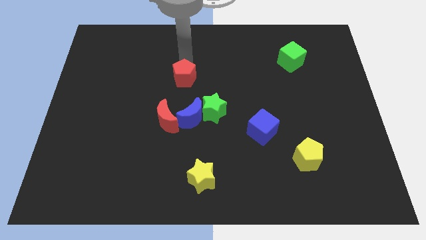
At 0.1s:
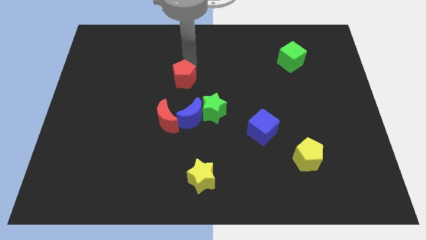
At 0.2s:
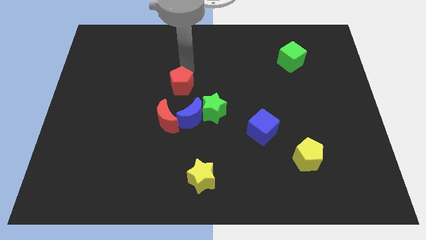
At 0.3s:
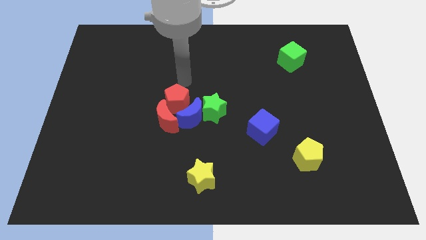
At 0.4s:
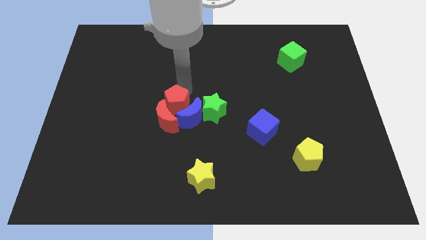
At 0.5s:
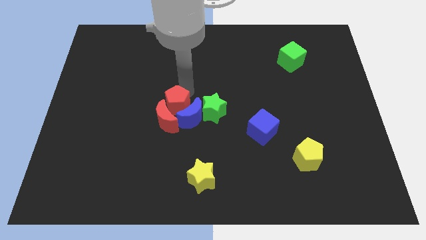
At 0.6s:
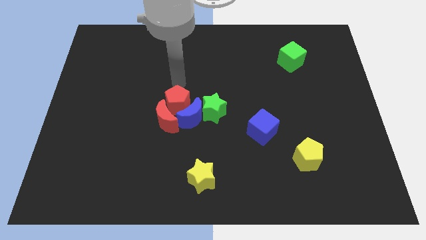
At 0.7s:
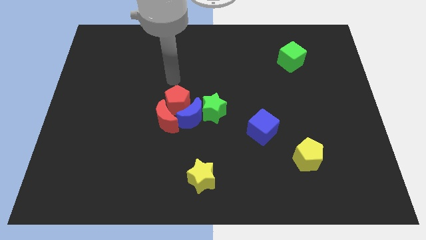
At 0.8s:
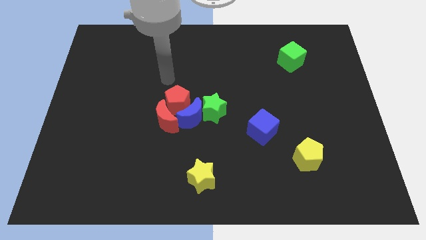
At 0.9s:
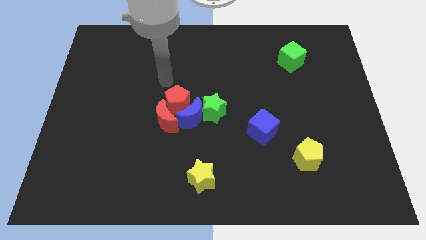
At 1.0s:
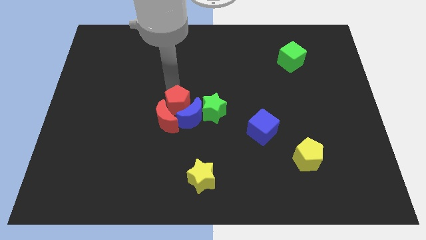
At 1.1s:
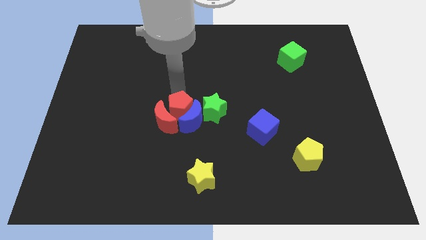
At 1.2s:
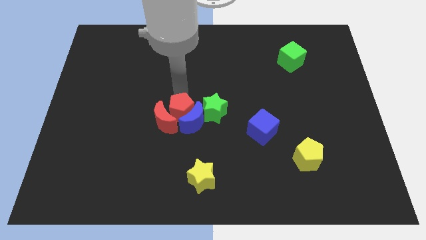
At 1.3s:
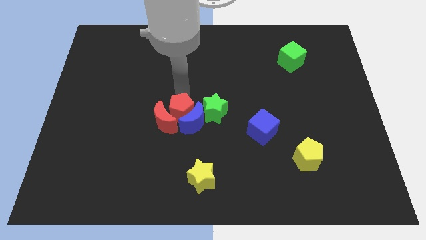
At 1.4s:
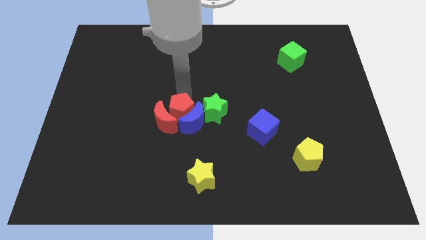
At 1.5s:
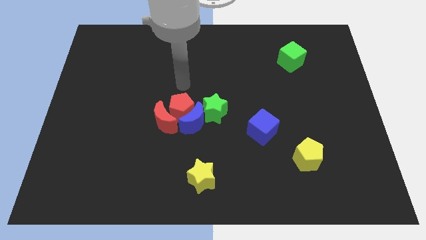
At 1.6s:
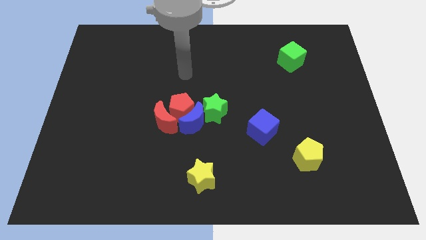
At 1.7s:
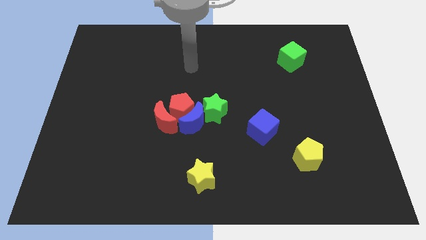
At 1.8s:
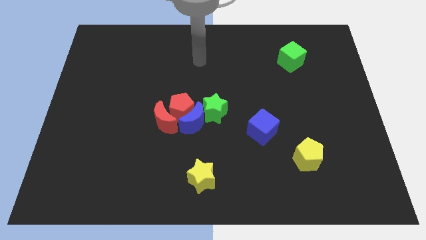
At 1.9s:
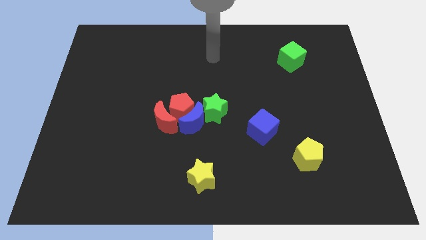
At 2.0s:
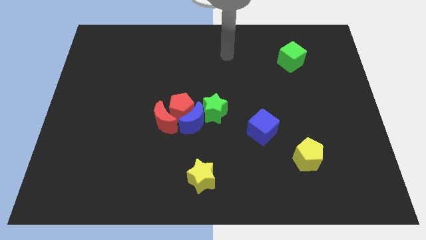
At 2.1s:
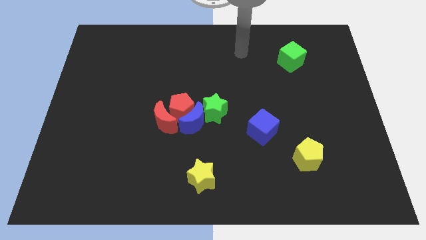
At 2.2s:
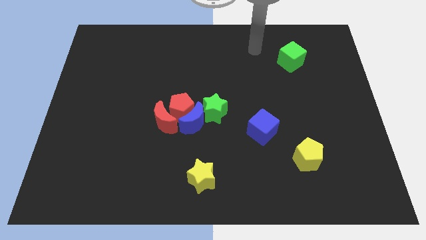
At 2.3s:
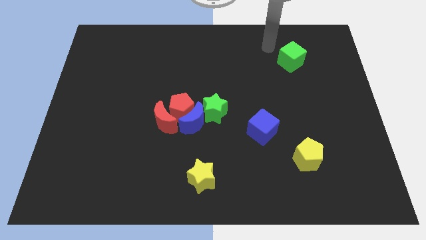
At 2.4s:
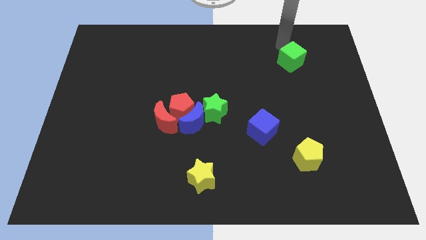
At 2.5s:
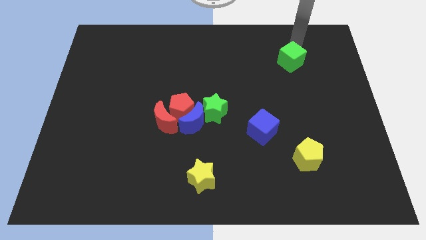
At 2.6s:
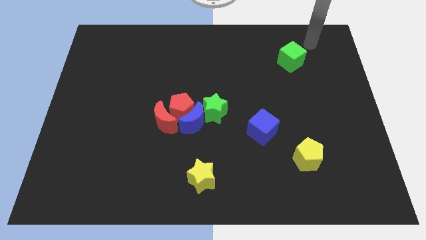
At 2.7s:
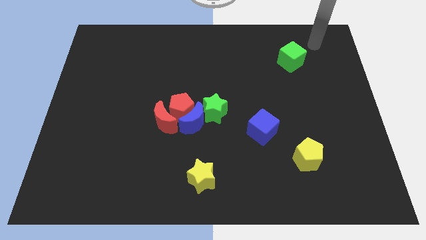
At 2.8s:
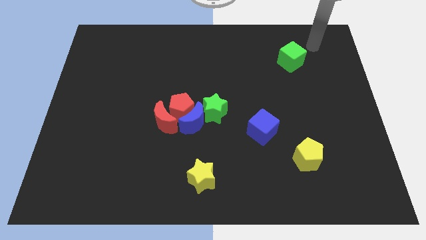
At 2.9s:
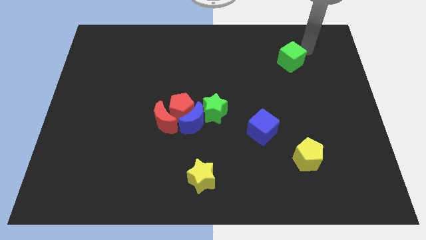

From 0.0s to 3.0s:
push the red pentagon into the blue crescent

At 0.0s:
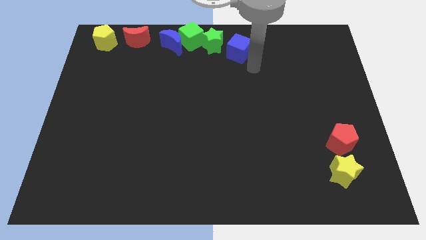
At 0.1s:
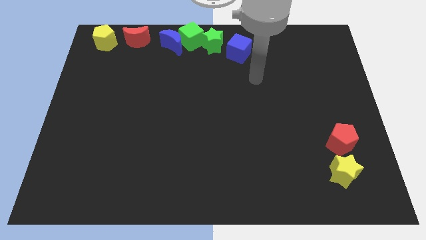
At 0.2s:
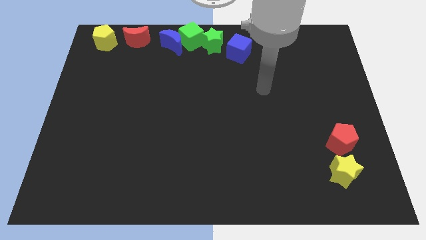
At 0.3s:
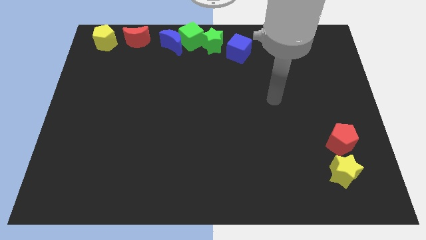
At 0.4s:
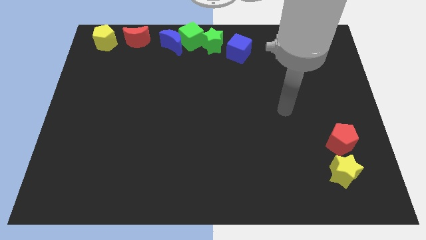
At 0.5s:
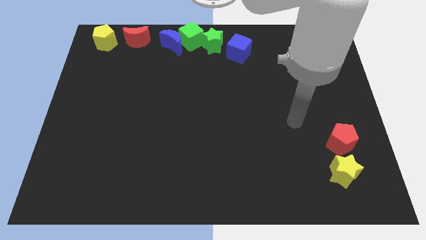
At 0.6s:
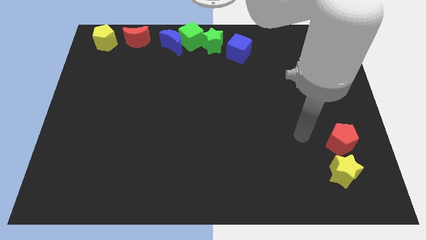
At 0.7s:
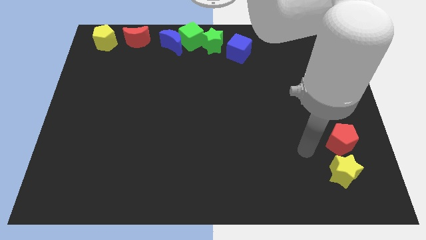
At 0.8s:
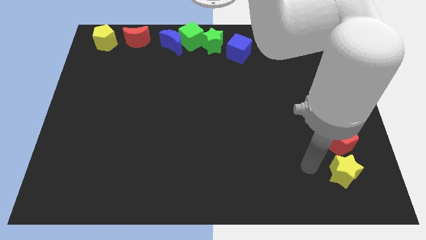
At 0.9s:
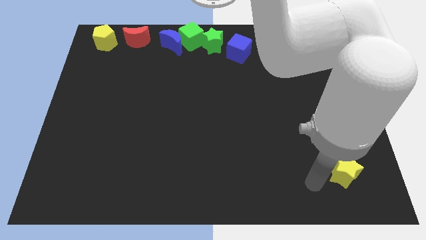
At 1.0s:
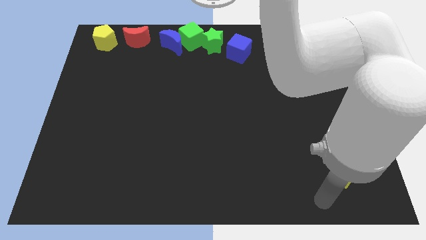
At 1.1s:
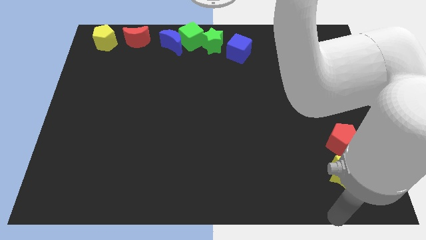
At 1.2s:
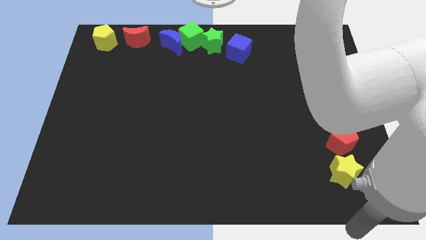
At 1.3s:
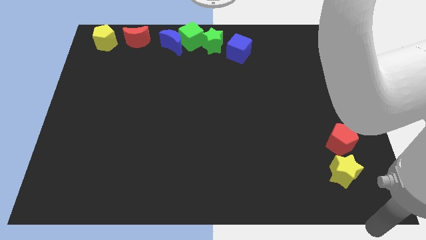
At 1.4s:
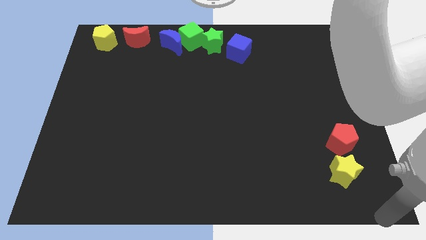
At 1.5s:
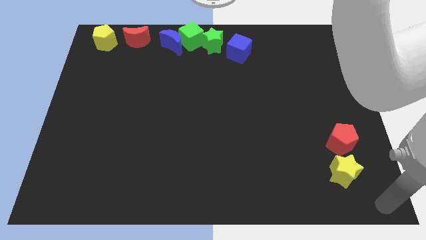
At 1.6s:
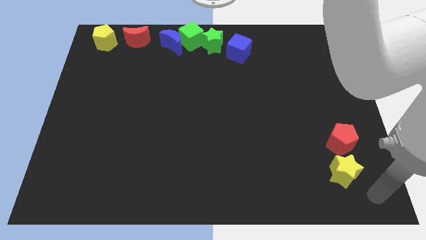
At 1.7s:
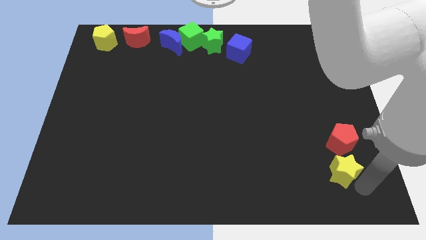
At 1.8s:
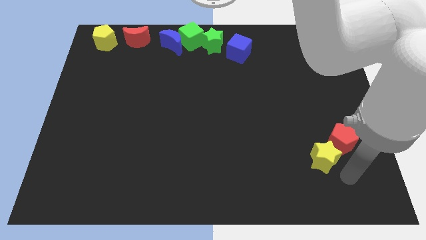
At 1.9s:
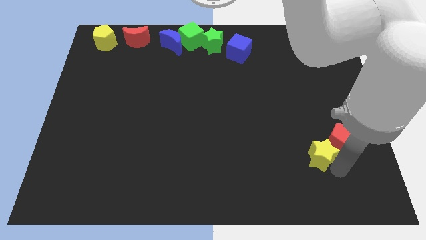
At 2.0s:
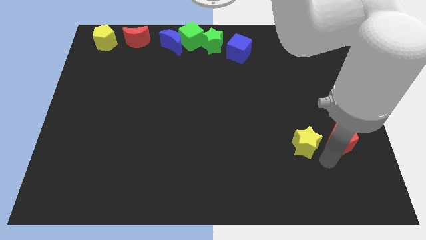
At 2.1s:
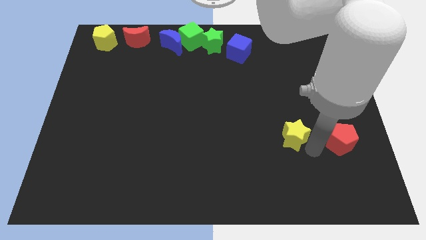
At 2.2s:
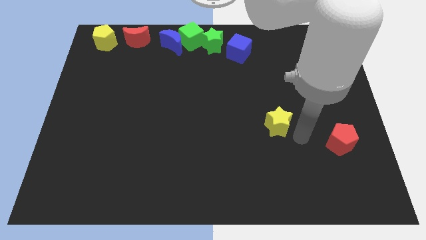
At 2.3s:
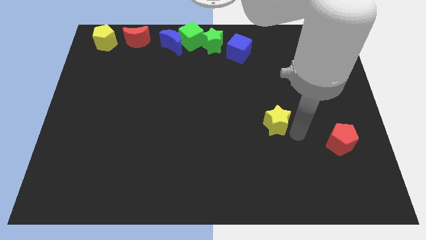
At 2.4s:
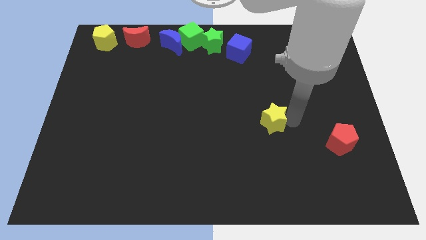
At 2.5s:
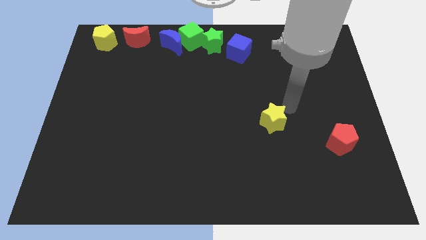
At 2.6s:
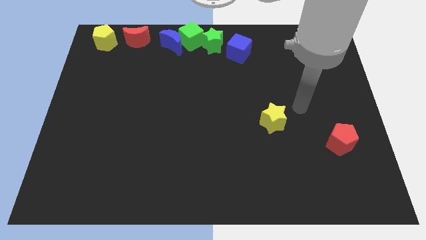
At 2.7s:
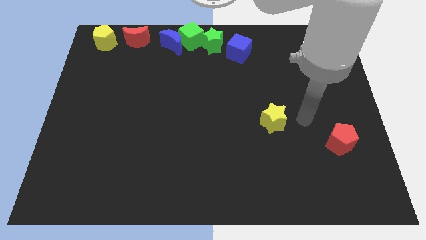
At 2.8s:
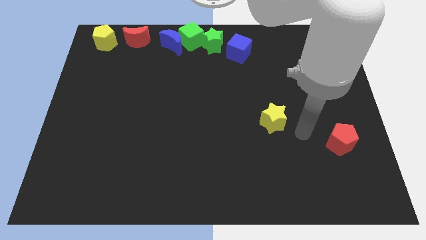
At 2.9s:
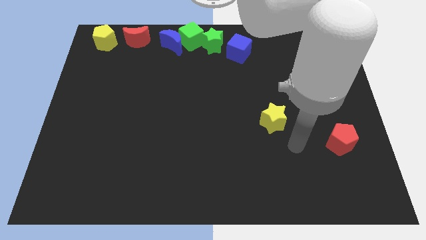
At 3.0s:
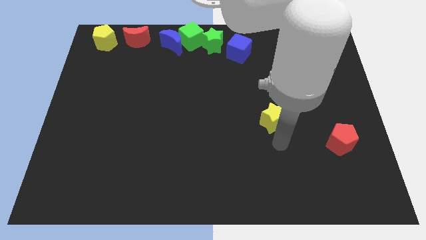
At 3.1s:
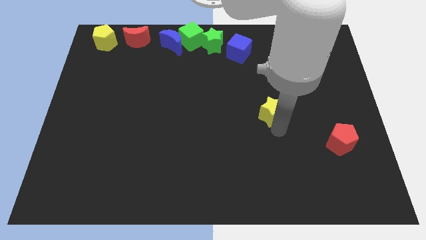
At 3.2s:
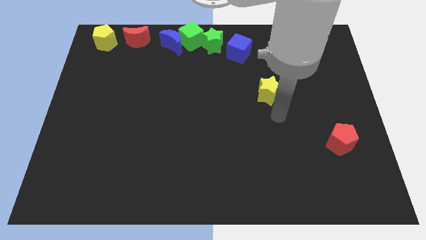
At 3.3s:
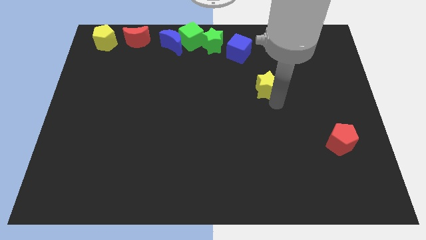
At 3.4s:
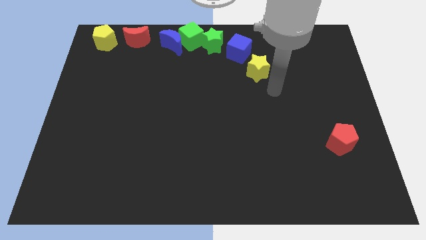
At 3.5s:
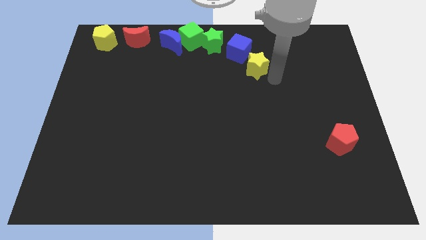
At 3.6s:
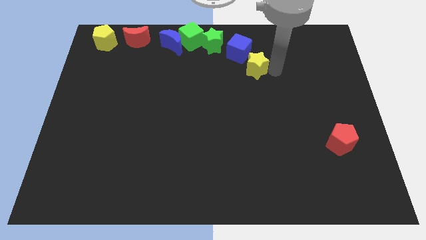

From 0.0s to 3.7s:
push the yellow star close to the bottom right side of the blue cube

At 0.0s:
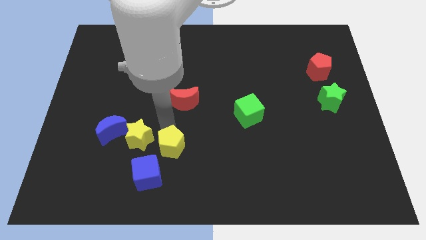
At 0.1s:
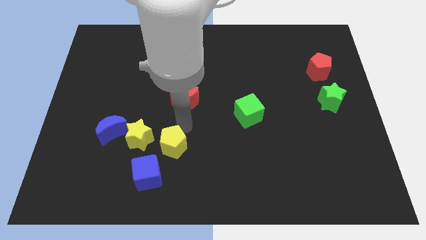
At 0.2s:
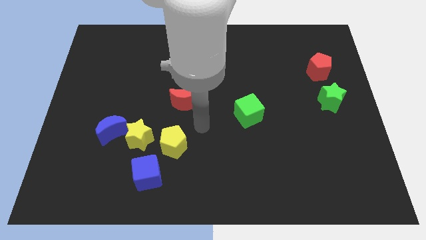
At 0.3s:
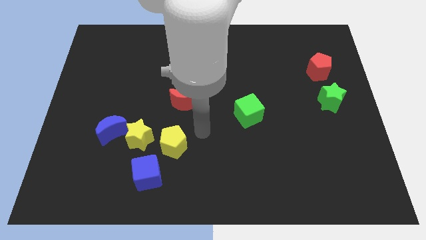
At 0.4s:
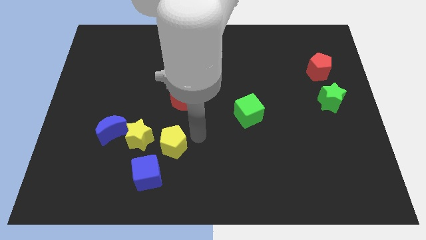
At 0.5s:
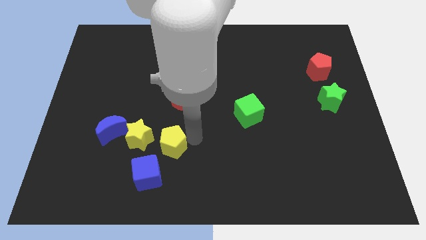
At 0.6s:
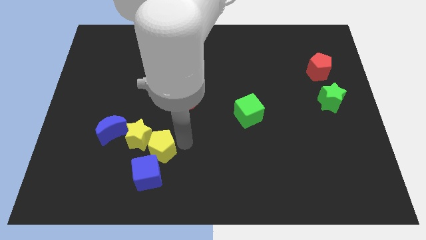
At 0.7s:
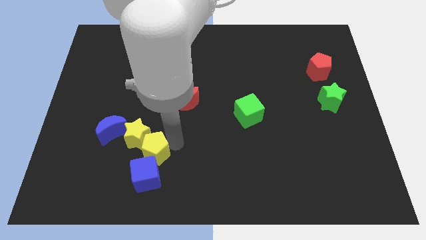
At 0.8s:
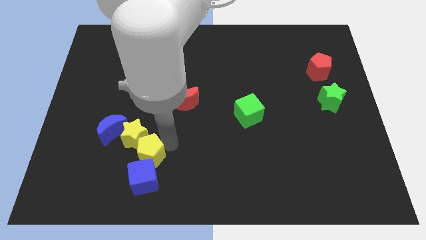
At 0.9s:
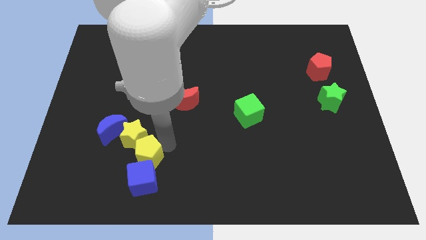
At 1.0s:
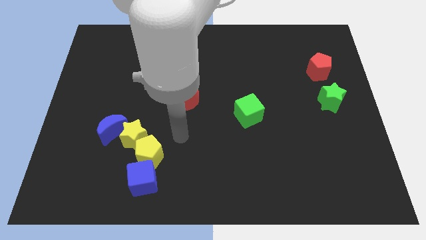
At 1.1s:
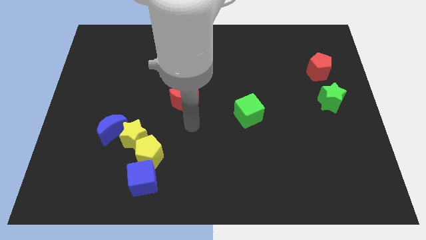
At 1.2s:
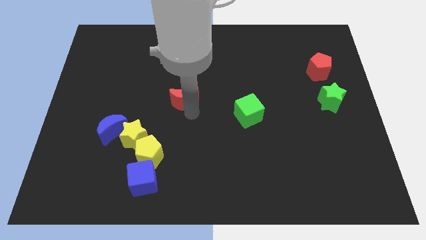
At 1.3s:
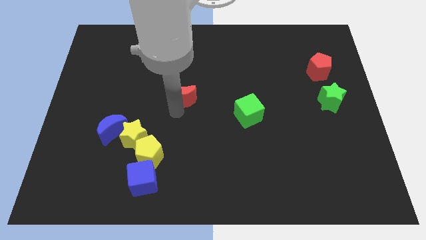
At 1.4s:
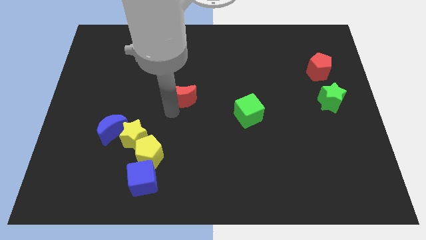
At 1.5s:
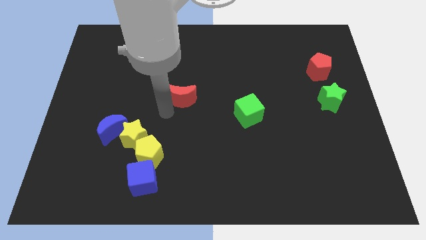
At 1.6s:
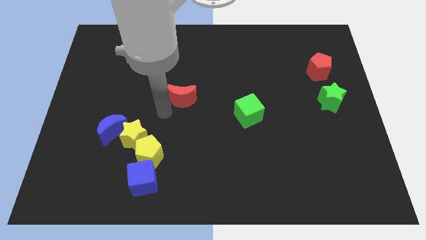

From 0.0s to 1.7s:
push the yellow pentagon into the yellow star

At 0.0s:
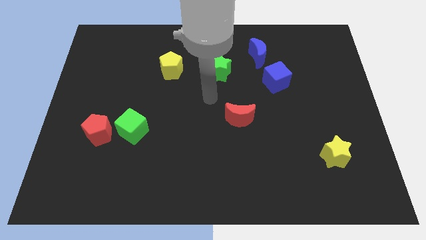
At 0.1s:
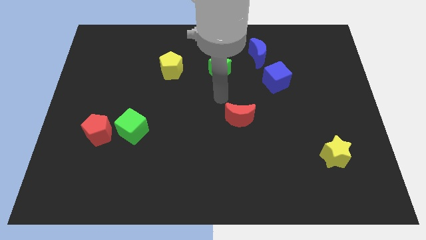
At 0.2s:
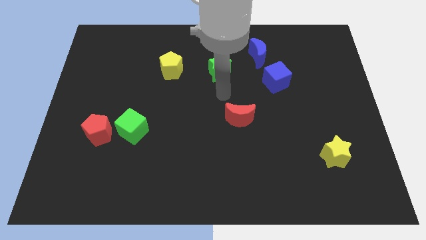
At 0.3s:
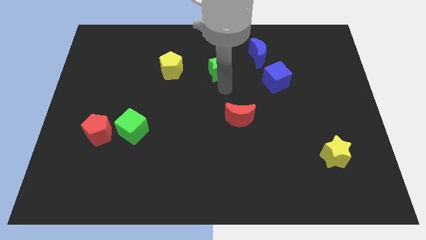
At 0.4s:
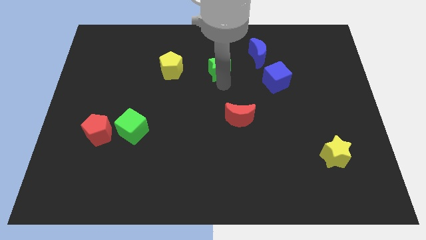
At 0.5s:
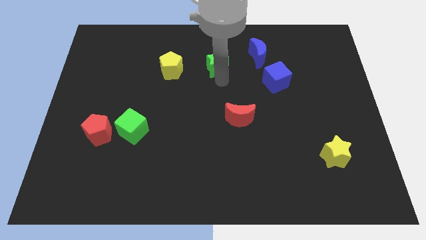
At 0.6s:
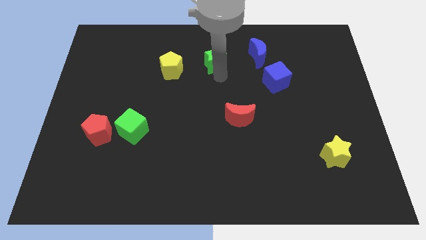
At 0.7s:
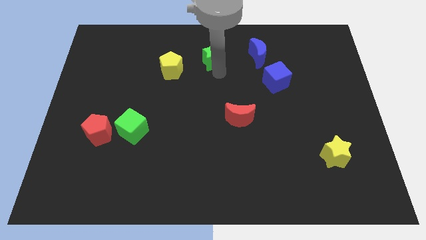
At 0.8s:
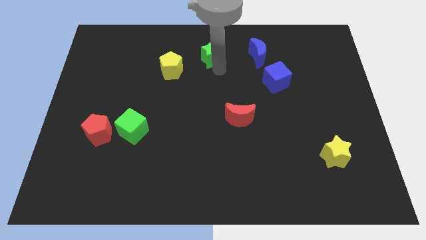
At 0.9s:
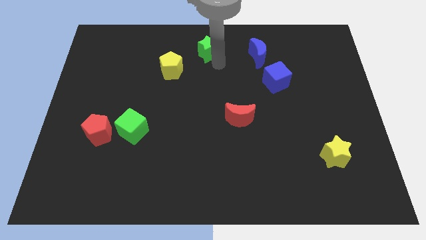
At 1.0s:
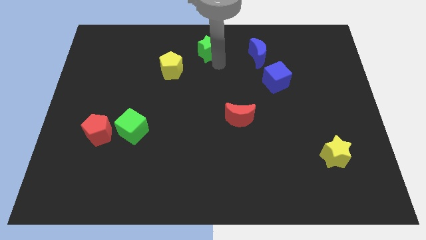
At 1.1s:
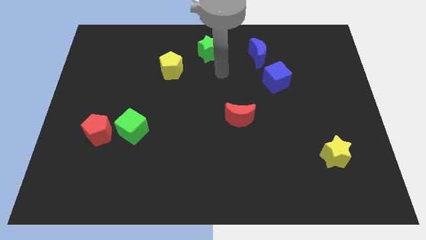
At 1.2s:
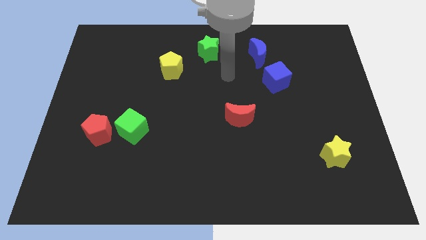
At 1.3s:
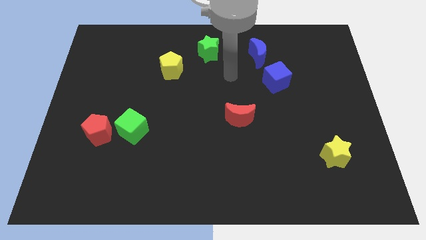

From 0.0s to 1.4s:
push the green star towards top center of the board
